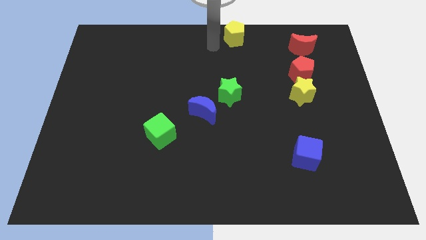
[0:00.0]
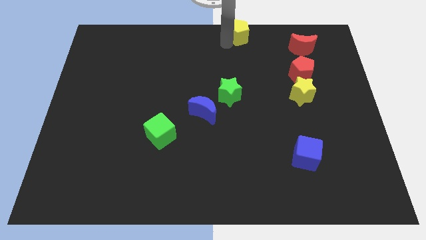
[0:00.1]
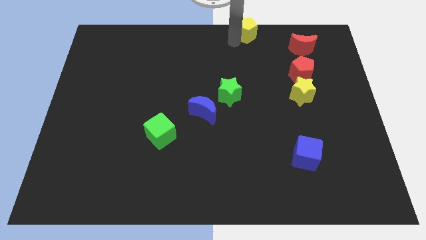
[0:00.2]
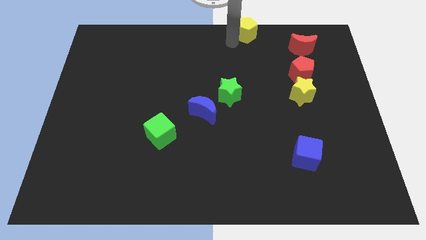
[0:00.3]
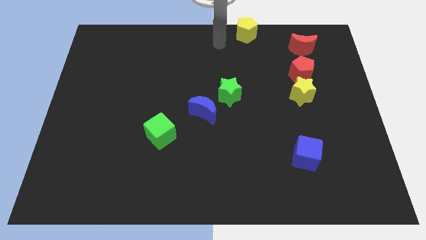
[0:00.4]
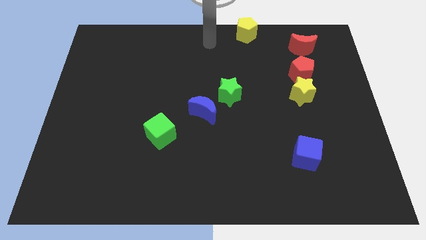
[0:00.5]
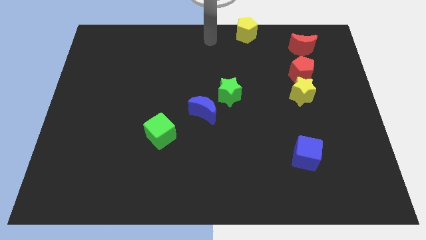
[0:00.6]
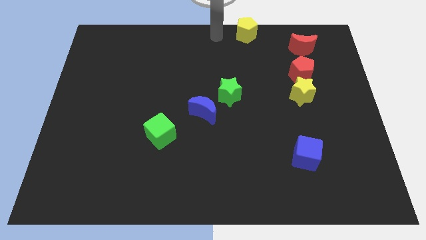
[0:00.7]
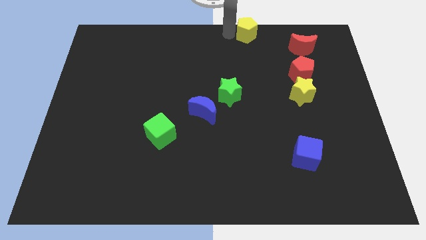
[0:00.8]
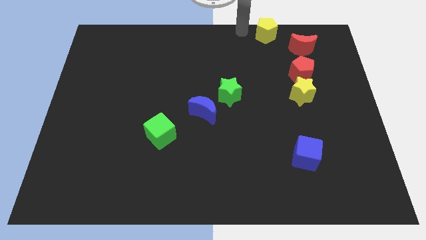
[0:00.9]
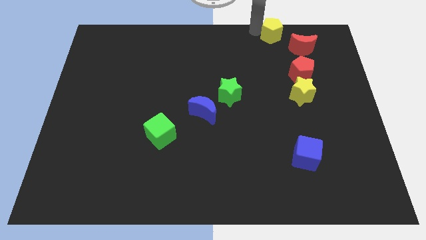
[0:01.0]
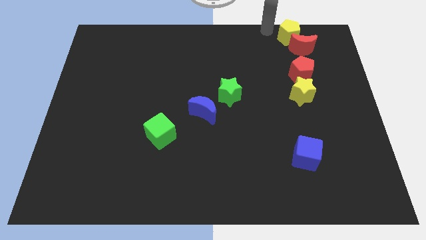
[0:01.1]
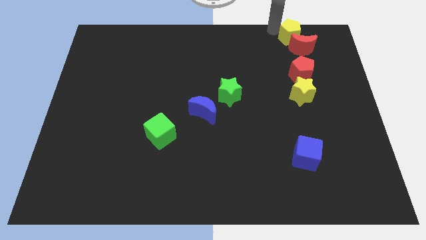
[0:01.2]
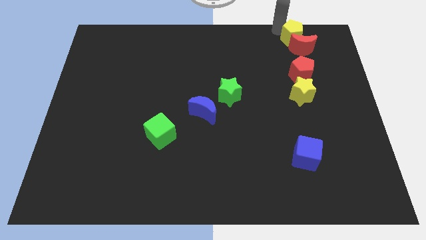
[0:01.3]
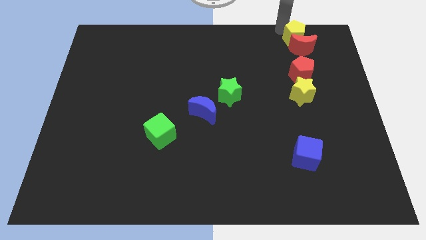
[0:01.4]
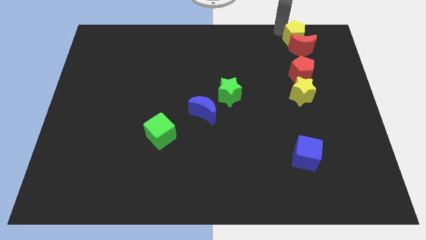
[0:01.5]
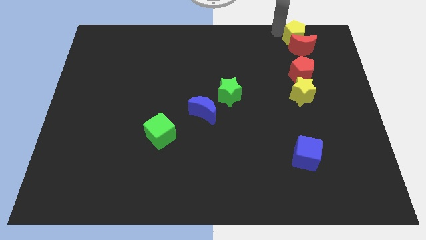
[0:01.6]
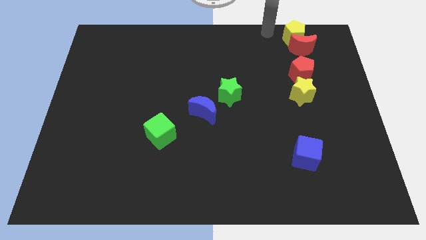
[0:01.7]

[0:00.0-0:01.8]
put the yellow pentagon on the top of the red moon

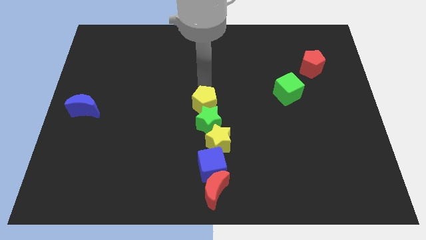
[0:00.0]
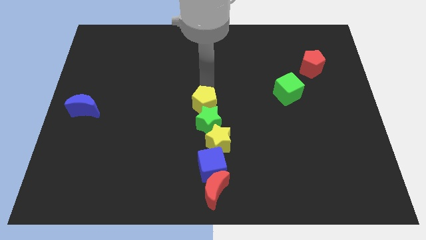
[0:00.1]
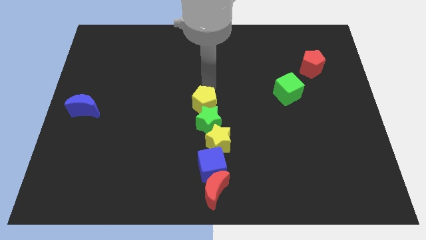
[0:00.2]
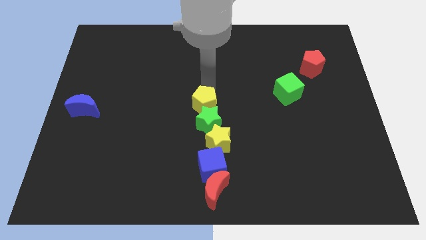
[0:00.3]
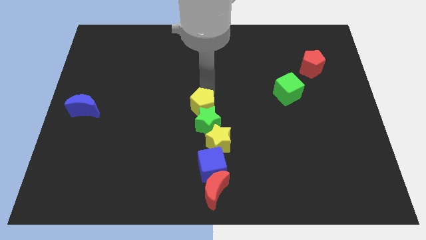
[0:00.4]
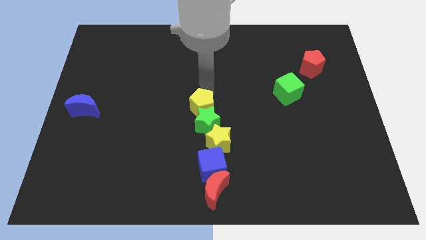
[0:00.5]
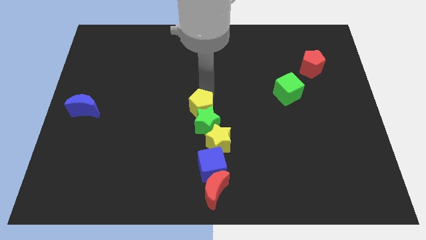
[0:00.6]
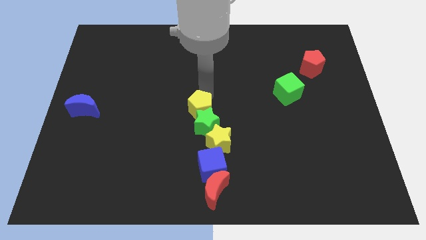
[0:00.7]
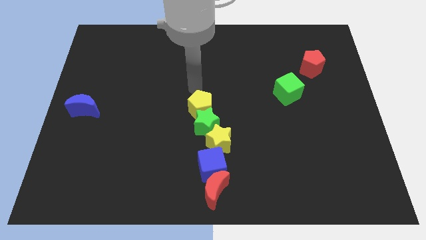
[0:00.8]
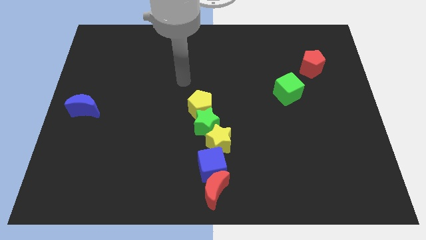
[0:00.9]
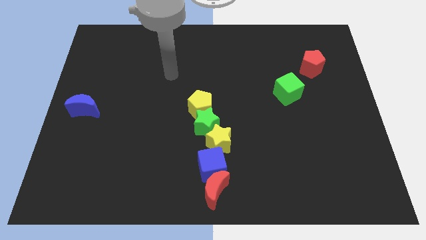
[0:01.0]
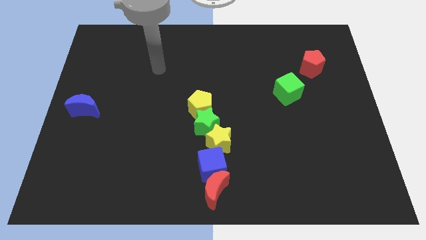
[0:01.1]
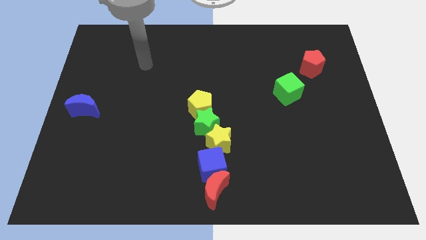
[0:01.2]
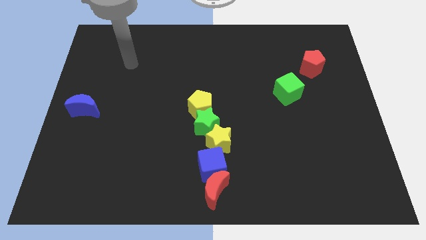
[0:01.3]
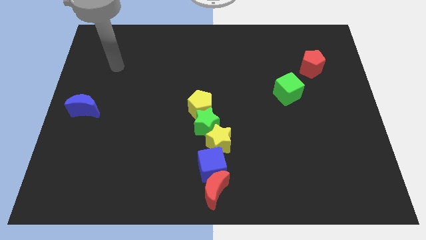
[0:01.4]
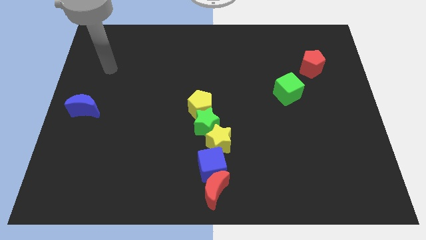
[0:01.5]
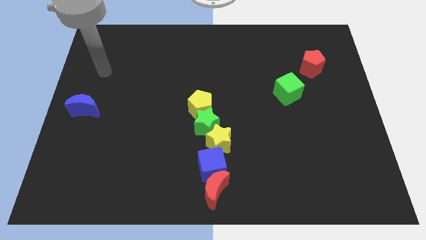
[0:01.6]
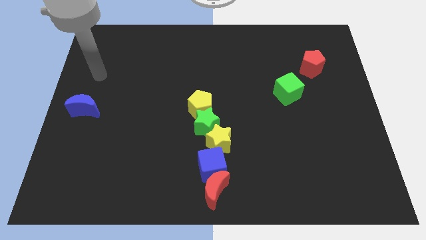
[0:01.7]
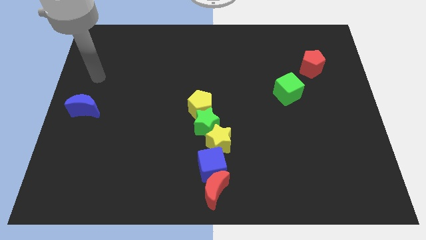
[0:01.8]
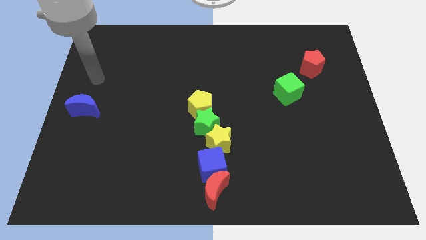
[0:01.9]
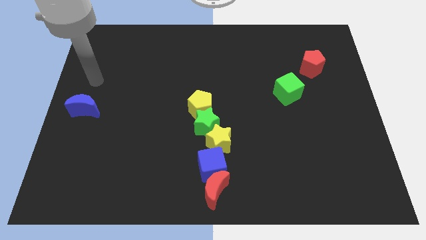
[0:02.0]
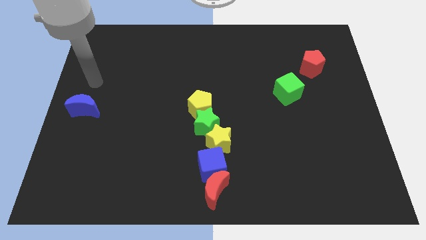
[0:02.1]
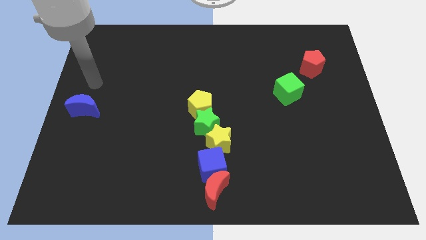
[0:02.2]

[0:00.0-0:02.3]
move your arm away from yellow pentagon

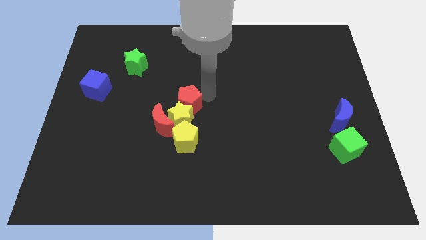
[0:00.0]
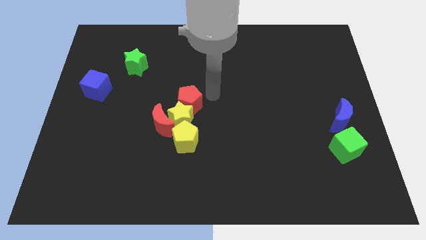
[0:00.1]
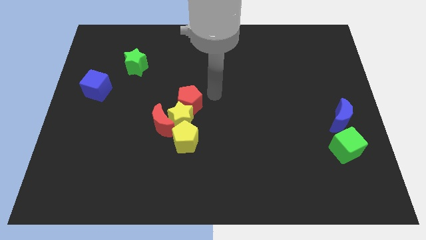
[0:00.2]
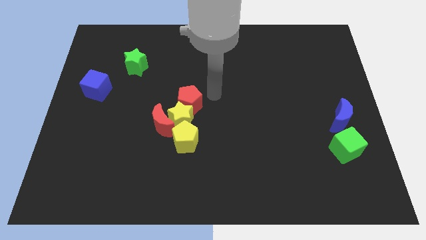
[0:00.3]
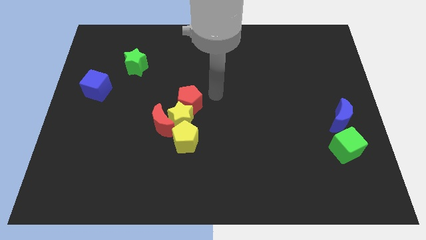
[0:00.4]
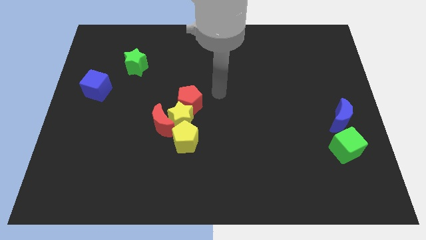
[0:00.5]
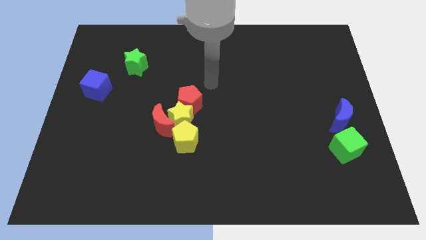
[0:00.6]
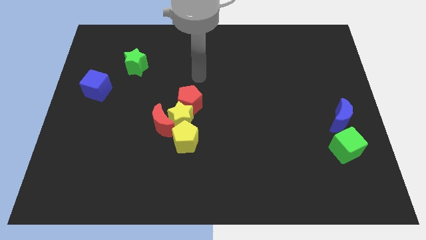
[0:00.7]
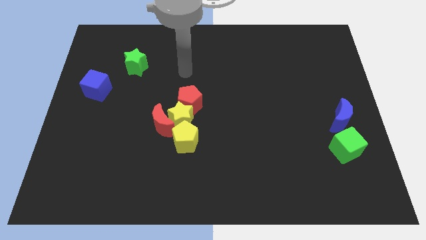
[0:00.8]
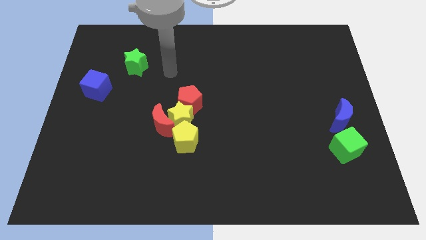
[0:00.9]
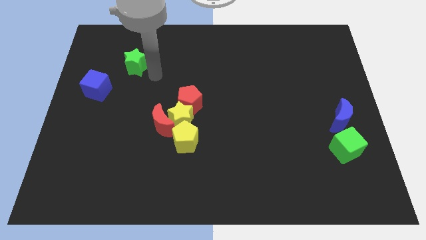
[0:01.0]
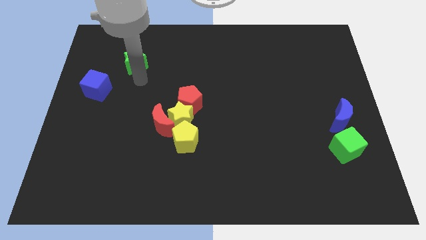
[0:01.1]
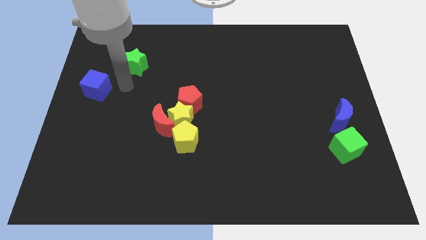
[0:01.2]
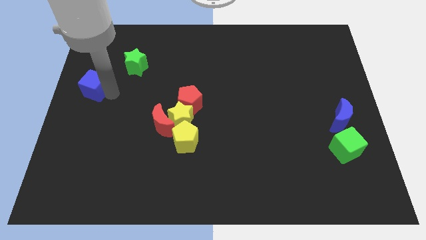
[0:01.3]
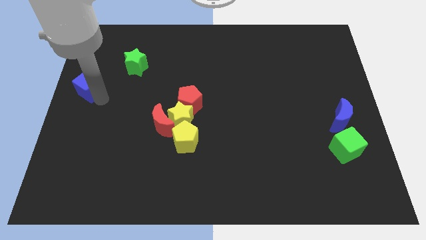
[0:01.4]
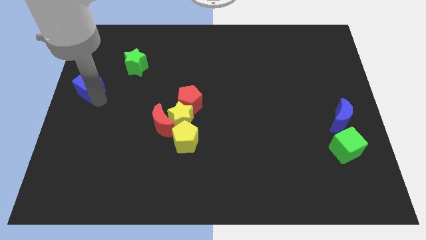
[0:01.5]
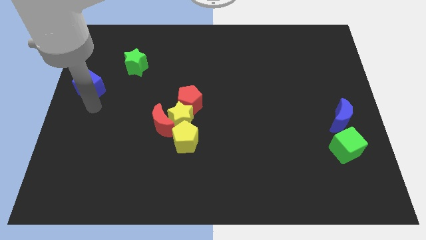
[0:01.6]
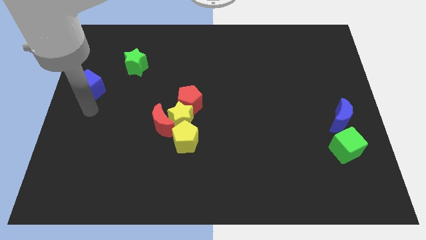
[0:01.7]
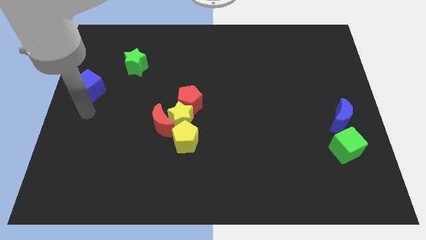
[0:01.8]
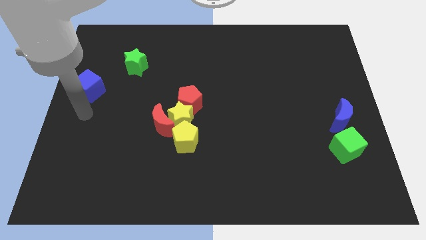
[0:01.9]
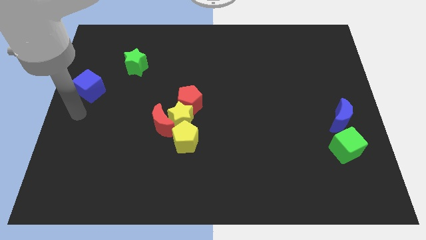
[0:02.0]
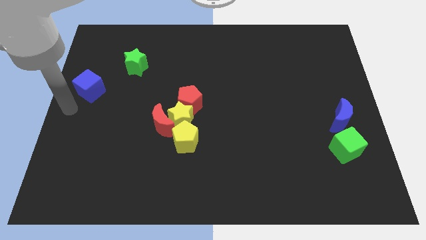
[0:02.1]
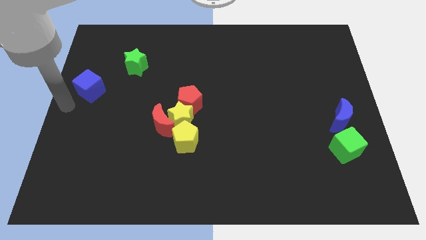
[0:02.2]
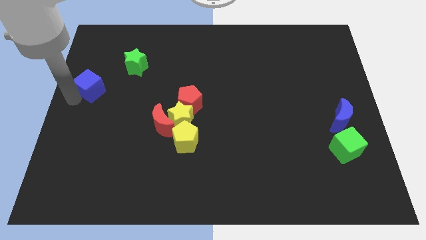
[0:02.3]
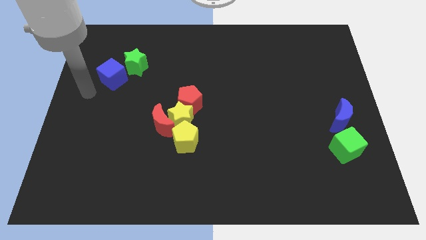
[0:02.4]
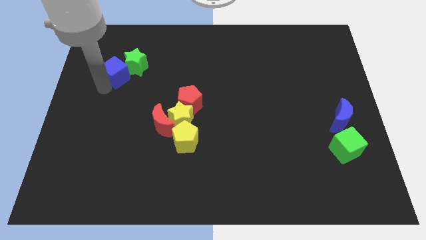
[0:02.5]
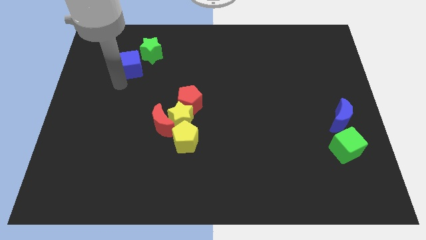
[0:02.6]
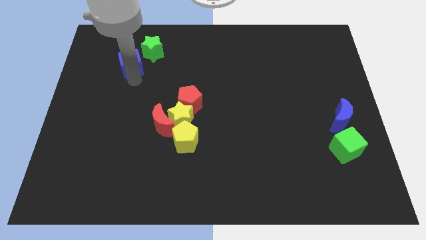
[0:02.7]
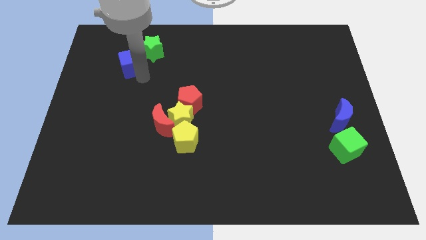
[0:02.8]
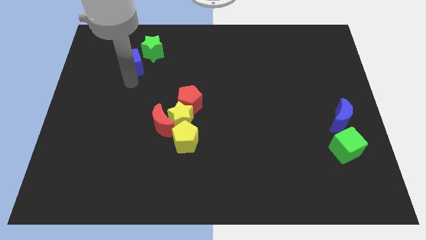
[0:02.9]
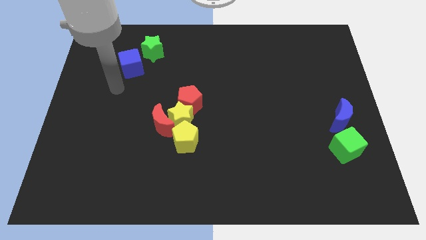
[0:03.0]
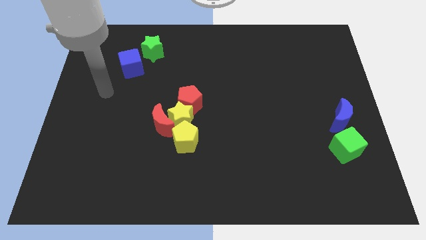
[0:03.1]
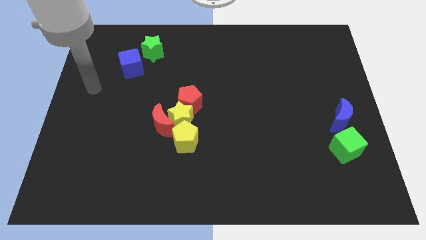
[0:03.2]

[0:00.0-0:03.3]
slide the blue cube into the green star

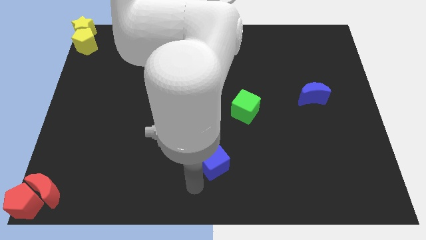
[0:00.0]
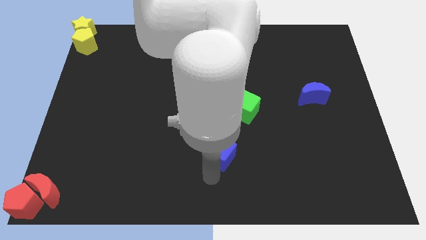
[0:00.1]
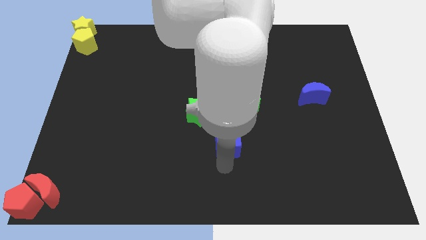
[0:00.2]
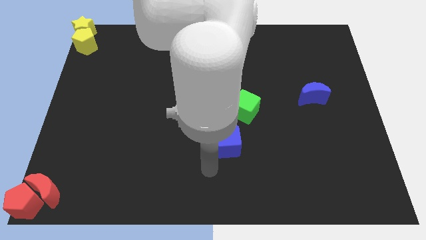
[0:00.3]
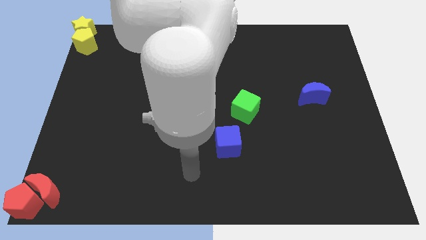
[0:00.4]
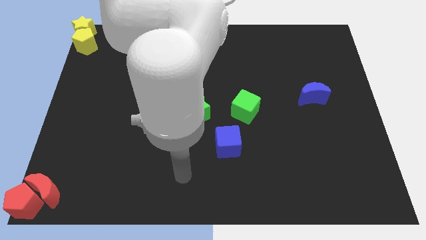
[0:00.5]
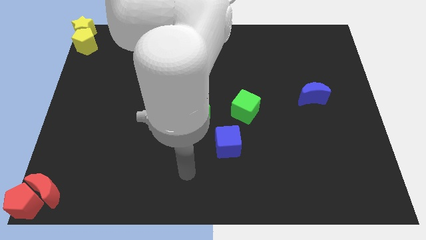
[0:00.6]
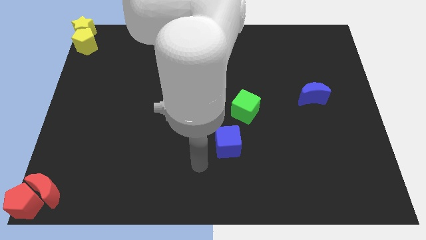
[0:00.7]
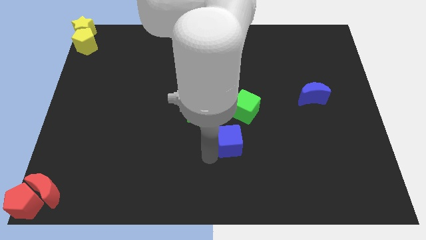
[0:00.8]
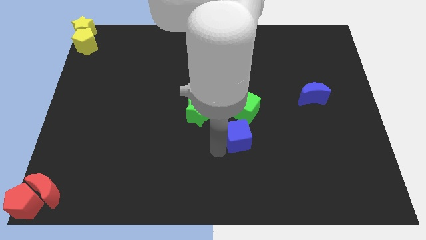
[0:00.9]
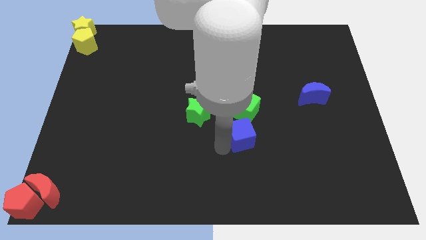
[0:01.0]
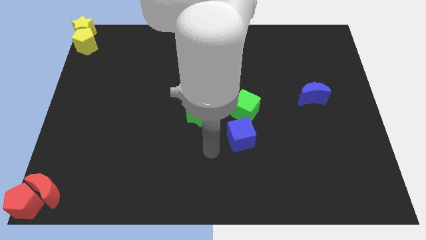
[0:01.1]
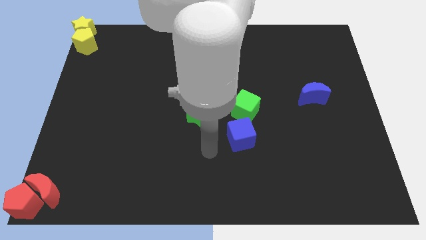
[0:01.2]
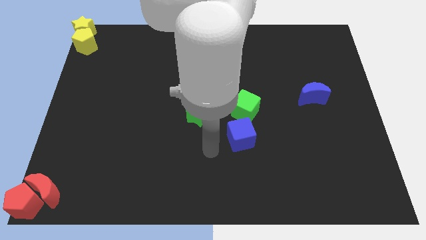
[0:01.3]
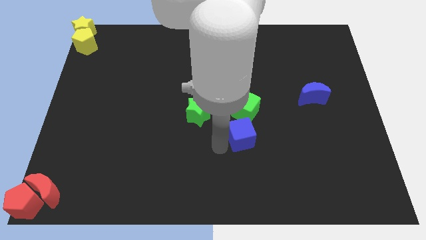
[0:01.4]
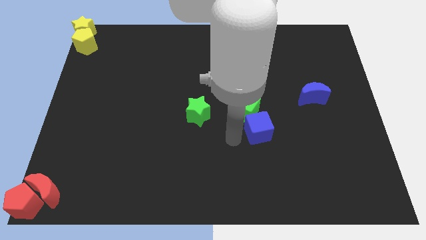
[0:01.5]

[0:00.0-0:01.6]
slide the blue cube into the green cube

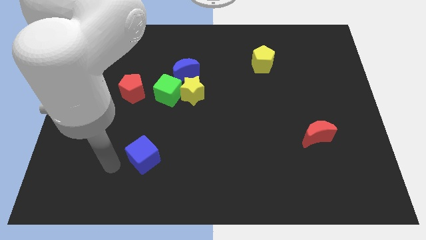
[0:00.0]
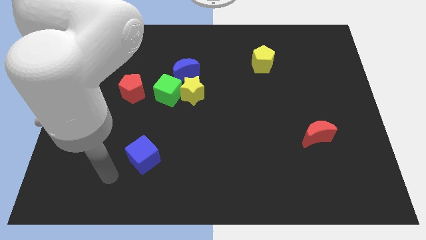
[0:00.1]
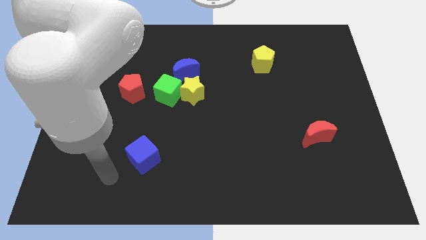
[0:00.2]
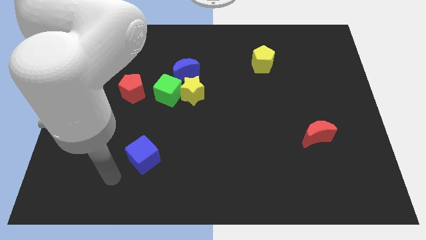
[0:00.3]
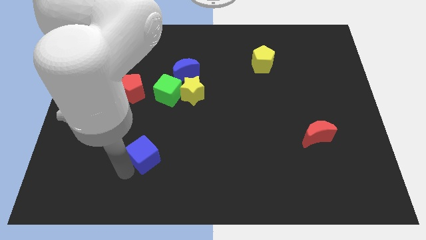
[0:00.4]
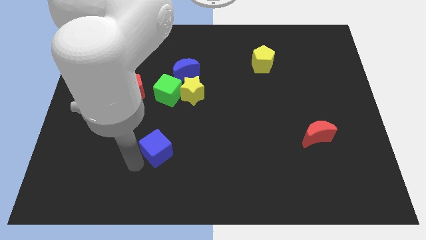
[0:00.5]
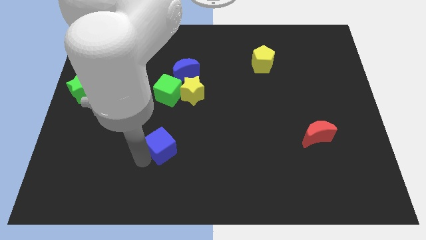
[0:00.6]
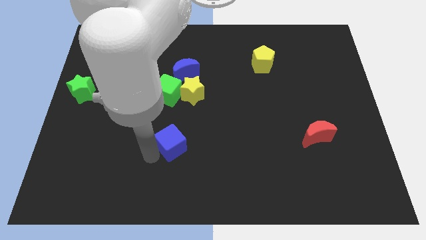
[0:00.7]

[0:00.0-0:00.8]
place the blue cube vertically below the green cube
